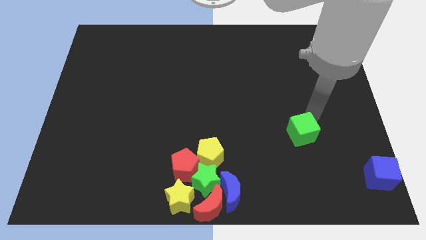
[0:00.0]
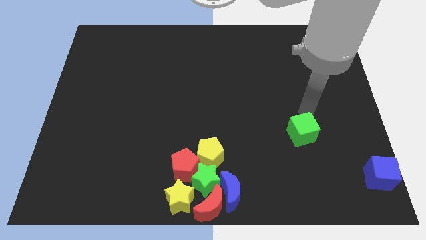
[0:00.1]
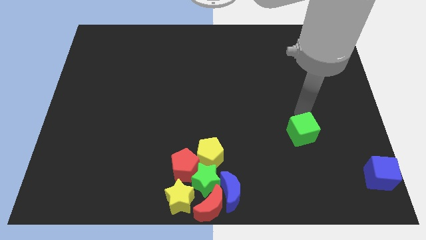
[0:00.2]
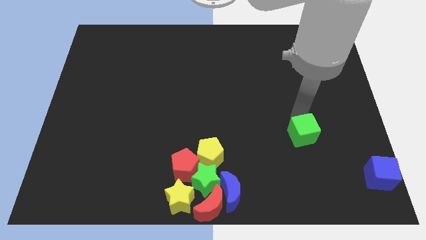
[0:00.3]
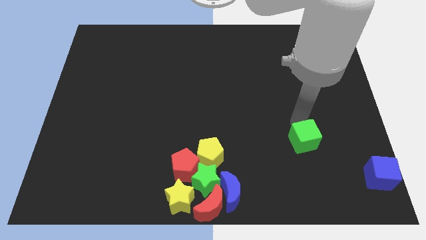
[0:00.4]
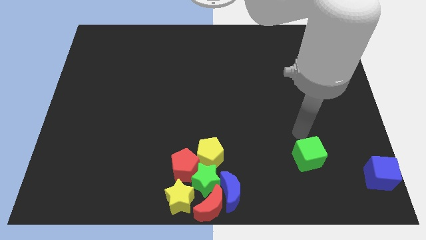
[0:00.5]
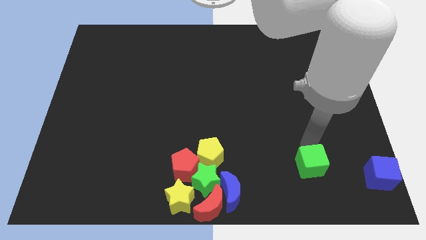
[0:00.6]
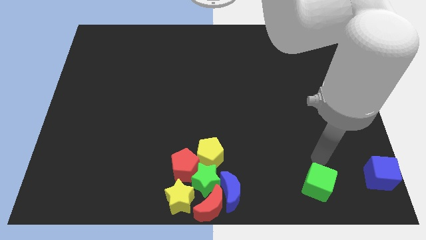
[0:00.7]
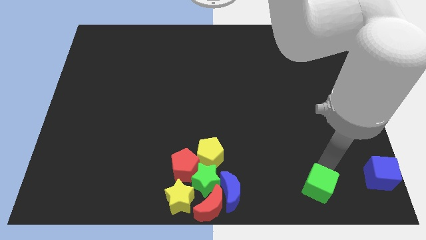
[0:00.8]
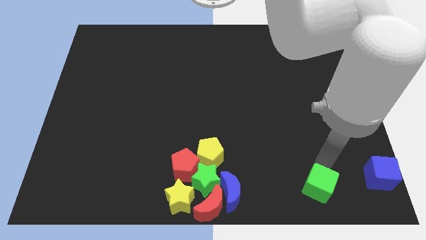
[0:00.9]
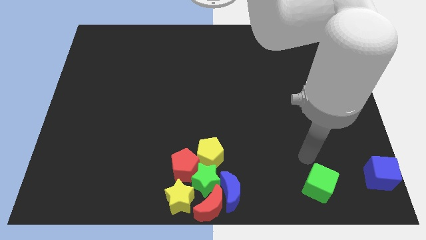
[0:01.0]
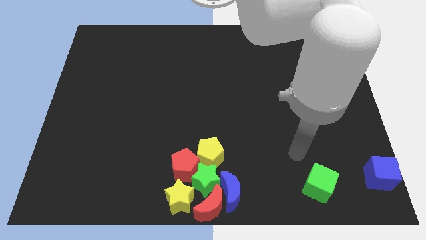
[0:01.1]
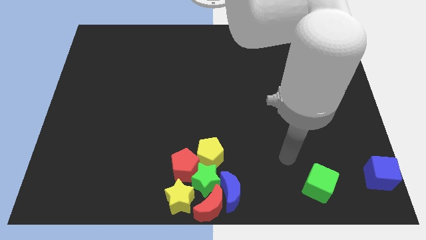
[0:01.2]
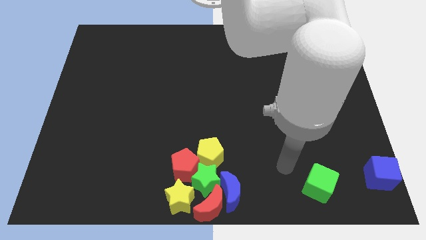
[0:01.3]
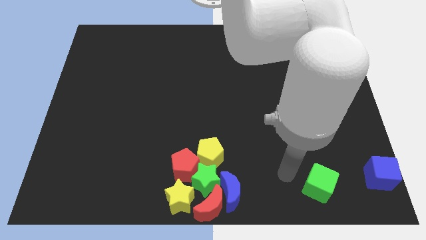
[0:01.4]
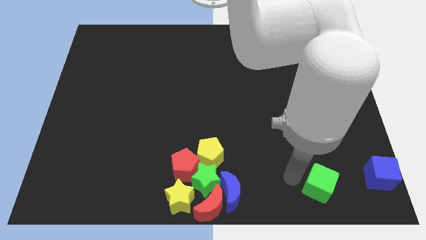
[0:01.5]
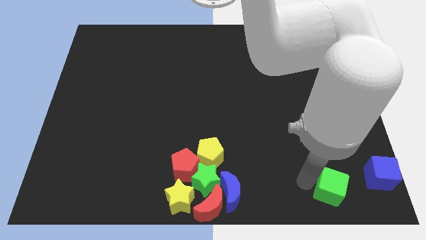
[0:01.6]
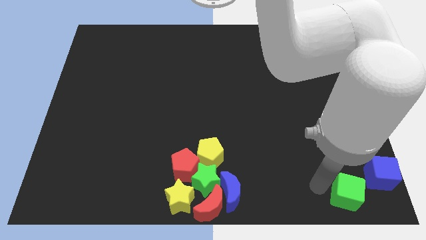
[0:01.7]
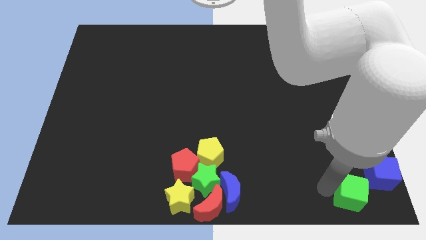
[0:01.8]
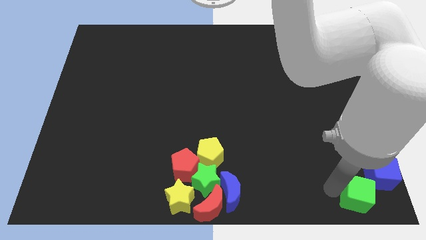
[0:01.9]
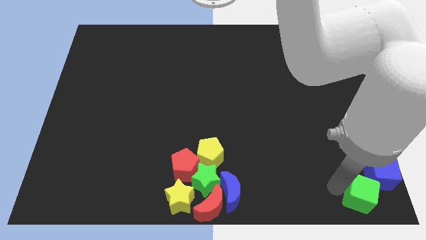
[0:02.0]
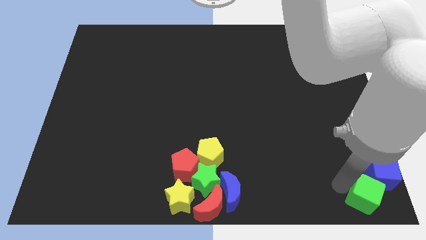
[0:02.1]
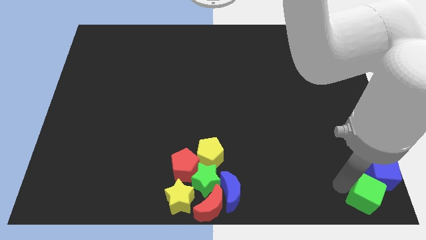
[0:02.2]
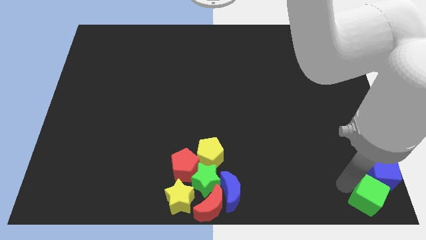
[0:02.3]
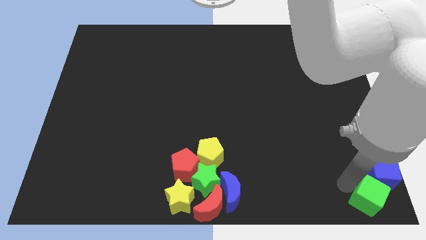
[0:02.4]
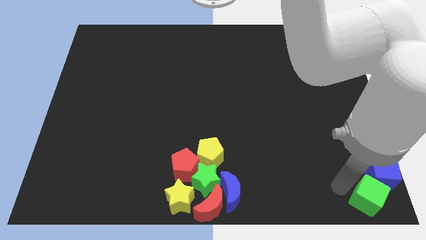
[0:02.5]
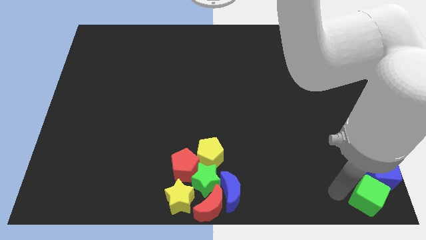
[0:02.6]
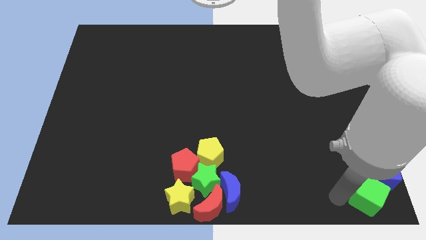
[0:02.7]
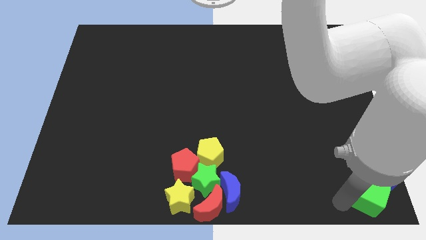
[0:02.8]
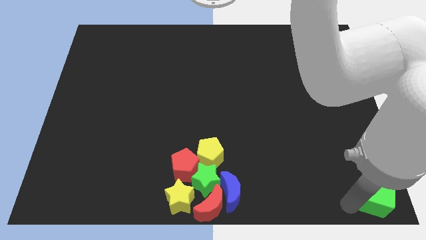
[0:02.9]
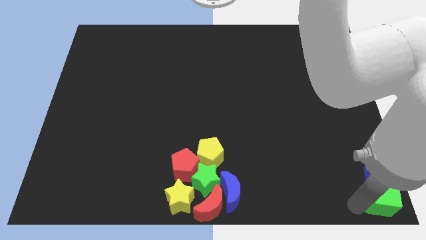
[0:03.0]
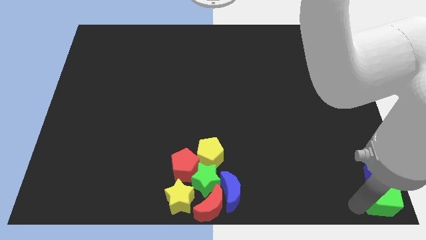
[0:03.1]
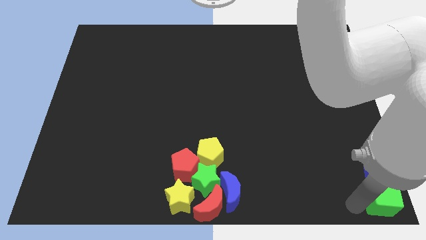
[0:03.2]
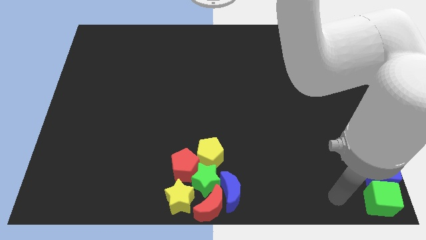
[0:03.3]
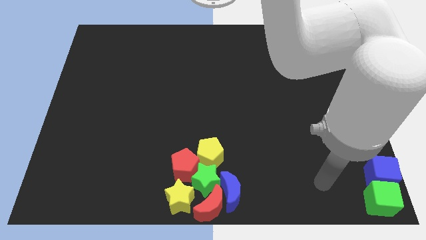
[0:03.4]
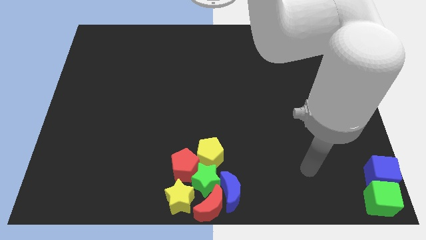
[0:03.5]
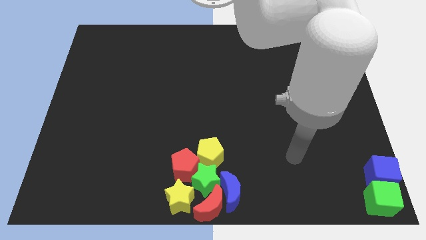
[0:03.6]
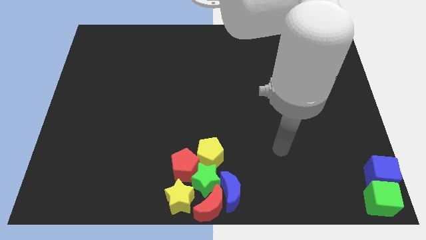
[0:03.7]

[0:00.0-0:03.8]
move the green cube to the bottom right corner of the board

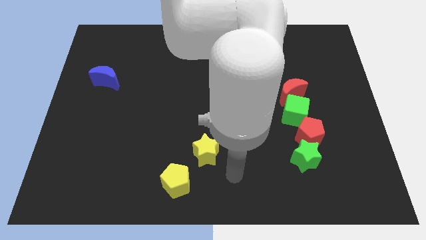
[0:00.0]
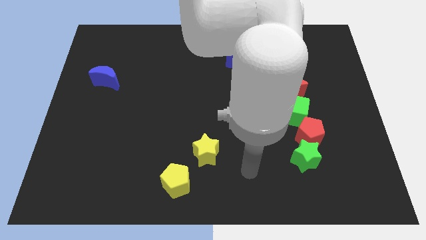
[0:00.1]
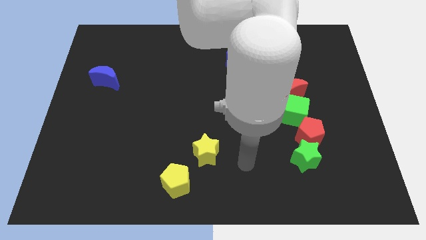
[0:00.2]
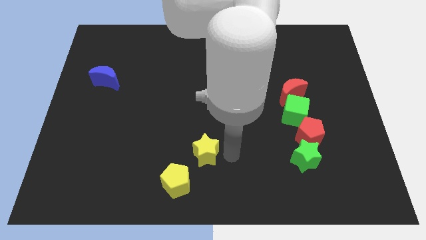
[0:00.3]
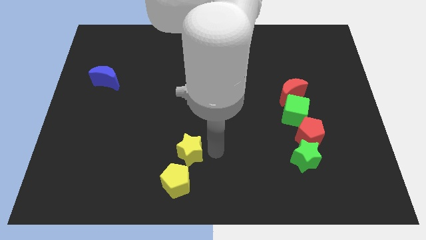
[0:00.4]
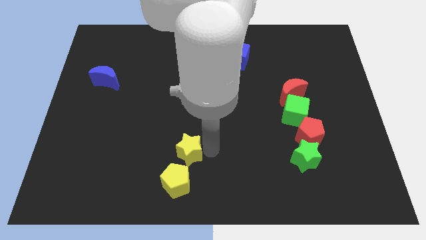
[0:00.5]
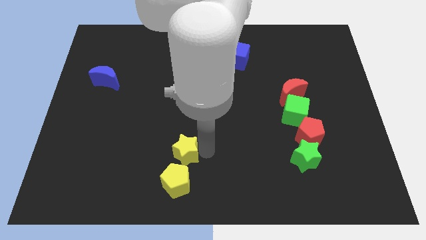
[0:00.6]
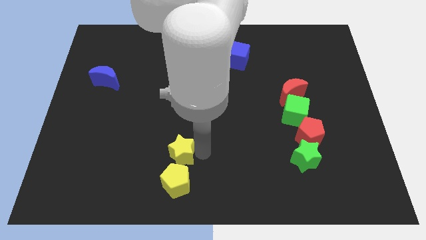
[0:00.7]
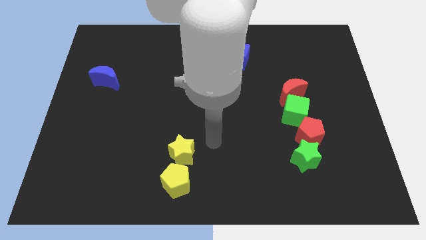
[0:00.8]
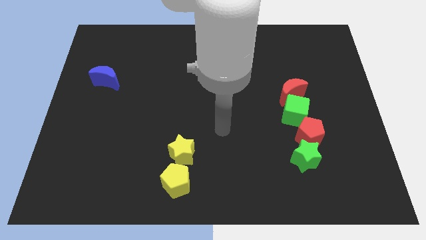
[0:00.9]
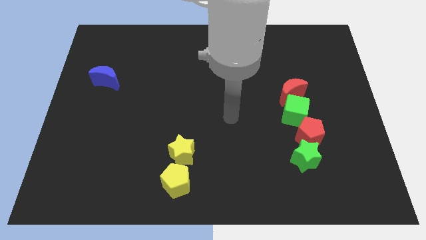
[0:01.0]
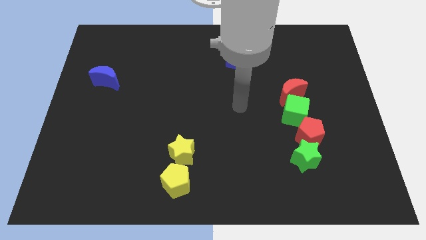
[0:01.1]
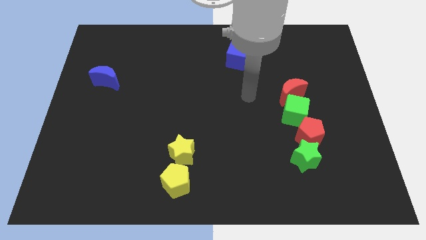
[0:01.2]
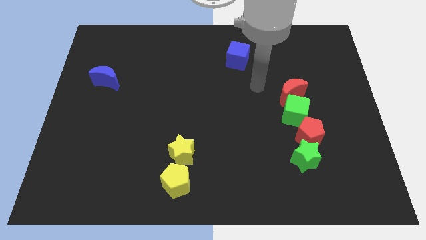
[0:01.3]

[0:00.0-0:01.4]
place yellow star above the yellow pentagon

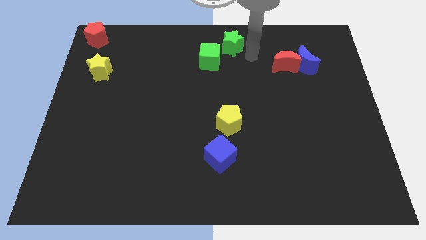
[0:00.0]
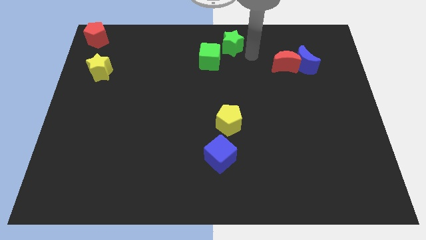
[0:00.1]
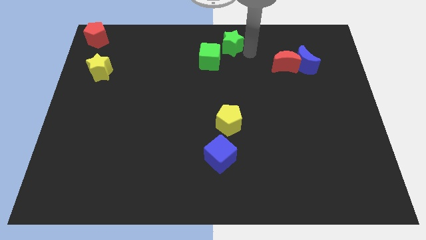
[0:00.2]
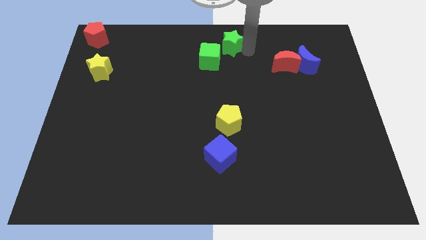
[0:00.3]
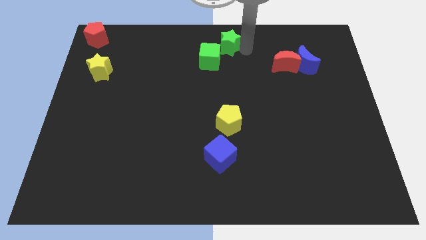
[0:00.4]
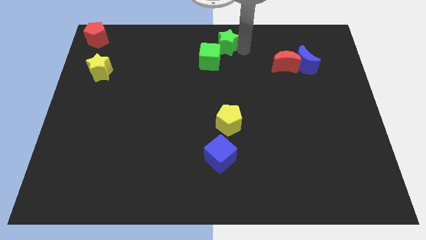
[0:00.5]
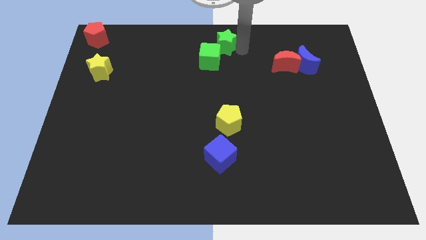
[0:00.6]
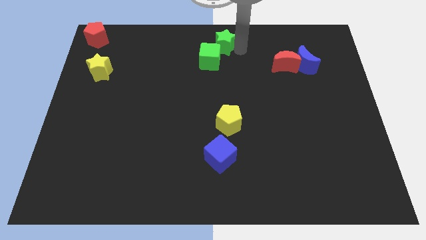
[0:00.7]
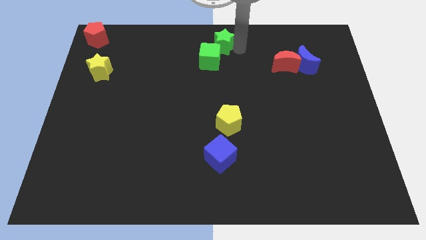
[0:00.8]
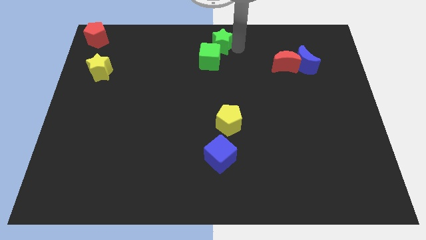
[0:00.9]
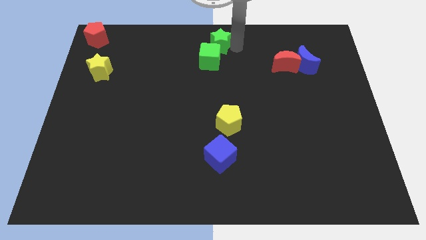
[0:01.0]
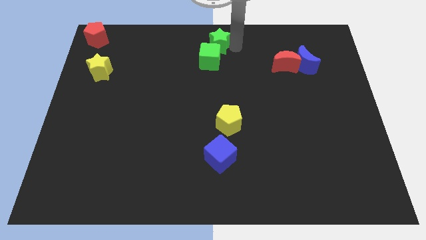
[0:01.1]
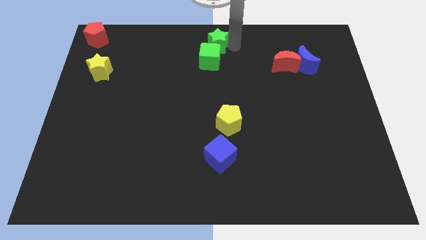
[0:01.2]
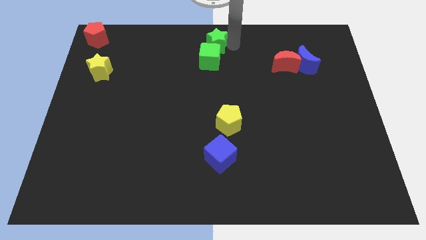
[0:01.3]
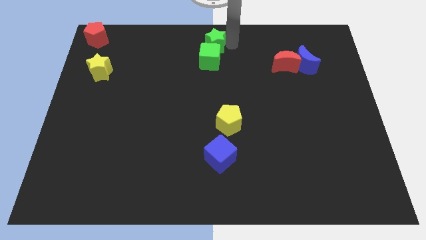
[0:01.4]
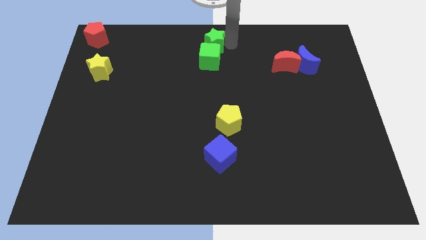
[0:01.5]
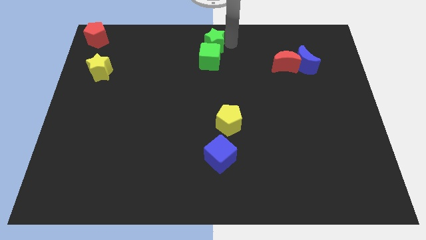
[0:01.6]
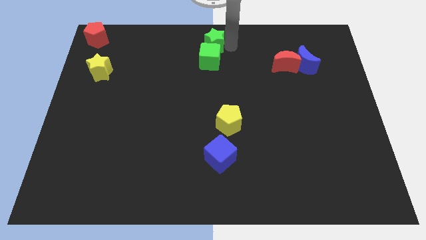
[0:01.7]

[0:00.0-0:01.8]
push the green star above the green cube

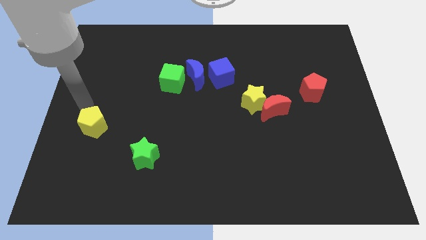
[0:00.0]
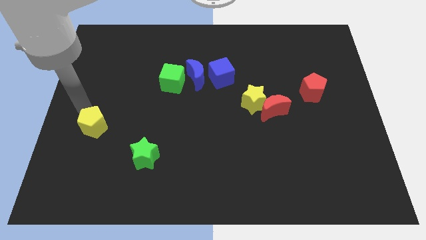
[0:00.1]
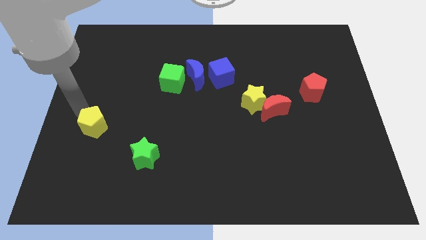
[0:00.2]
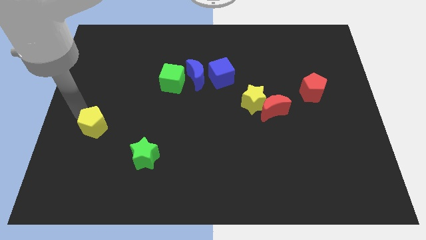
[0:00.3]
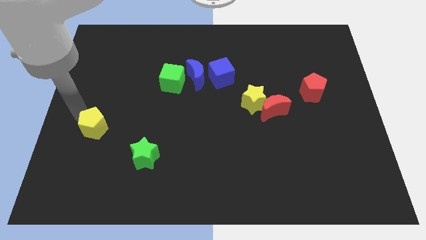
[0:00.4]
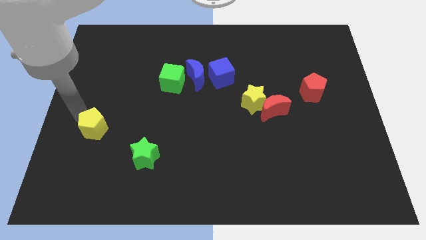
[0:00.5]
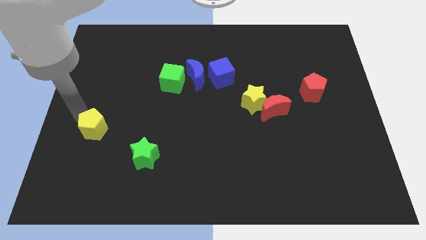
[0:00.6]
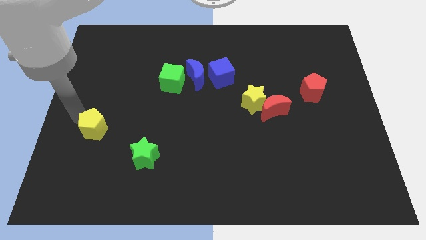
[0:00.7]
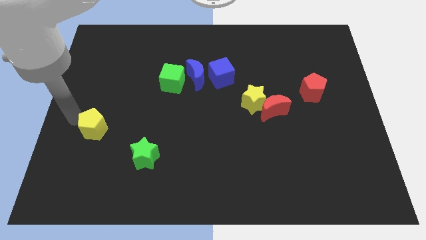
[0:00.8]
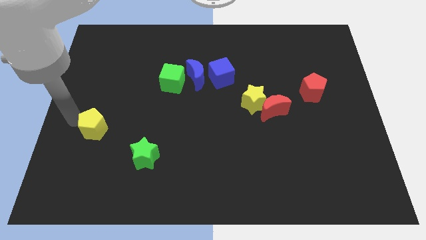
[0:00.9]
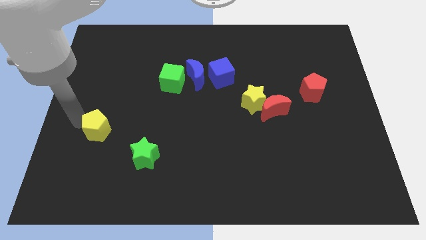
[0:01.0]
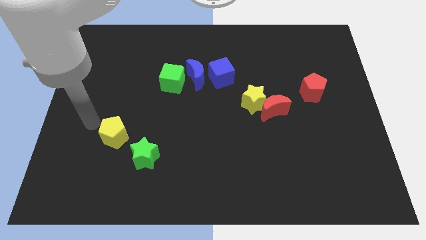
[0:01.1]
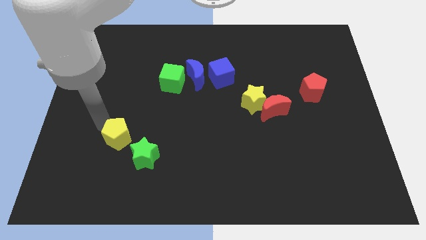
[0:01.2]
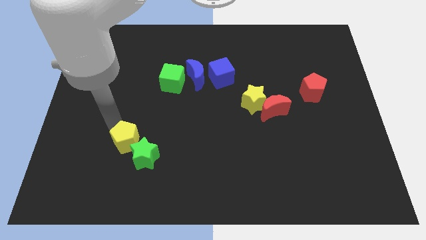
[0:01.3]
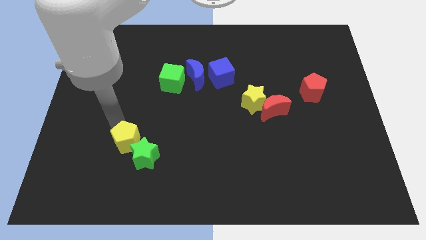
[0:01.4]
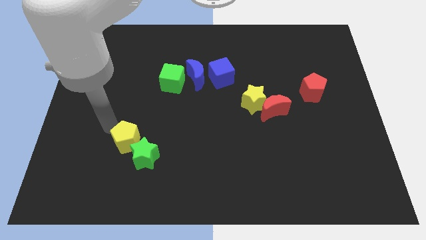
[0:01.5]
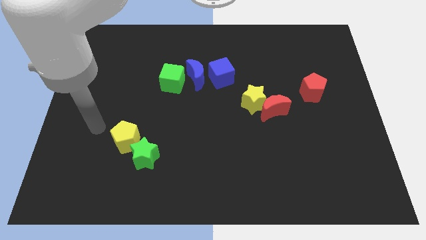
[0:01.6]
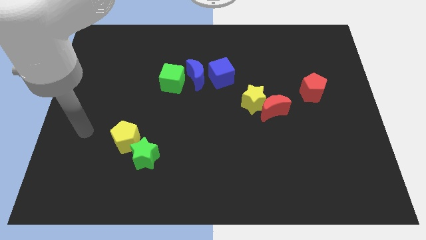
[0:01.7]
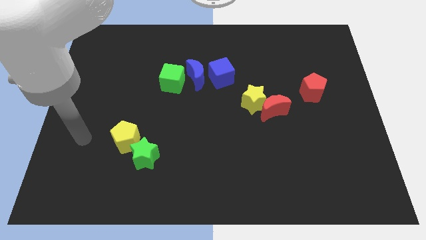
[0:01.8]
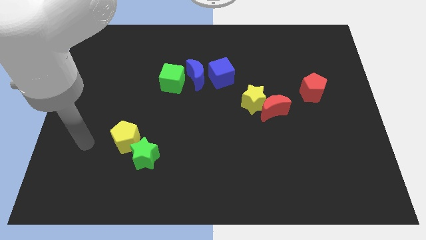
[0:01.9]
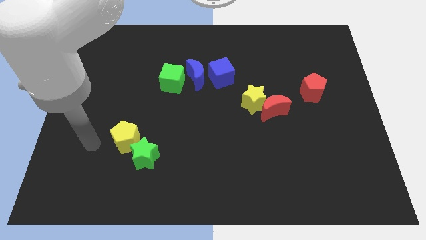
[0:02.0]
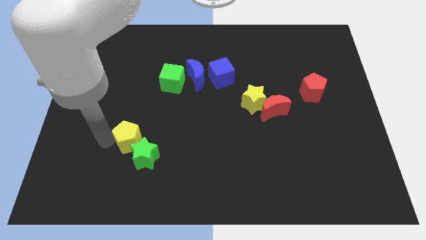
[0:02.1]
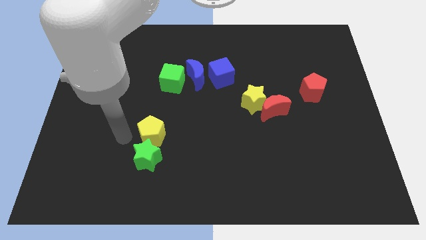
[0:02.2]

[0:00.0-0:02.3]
push the yellow pentagon to the top side of the green star
